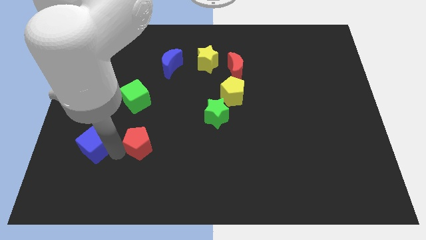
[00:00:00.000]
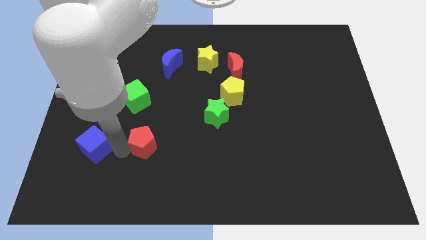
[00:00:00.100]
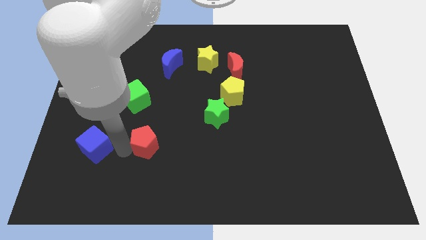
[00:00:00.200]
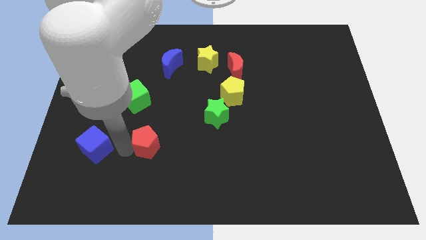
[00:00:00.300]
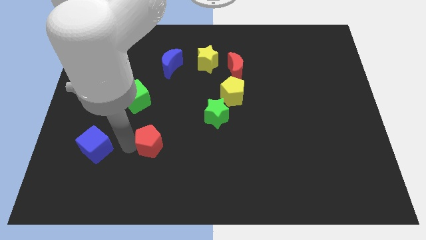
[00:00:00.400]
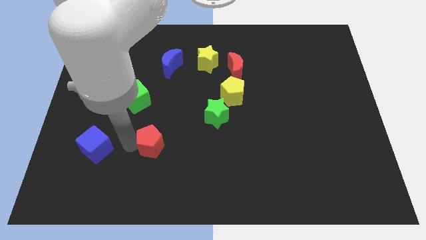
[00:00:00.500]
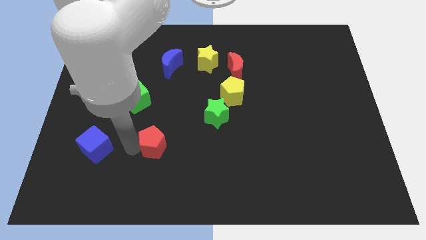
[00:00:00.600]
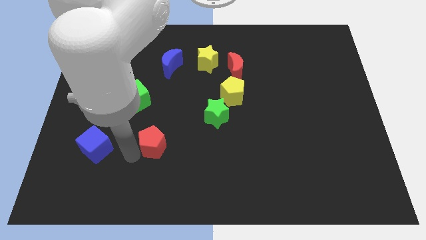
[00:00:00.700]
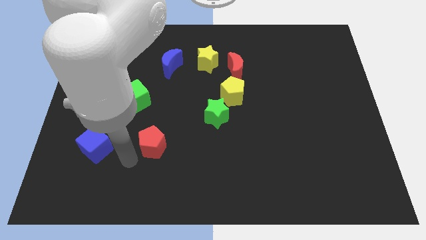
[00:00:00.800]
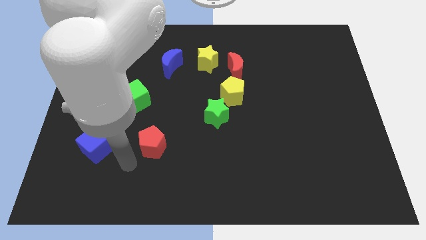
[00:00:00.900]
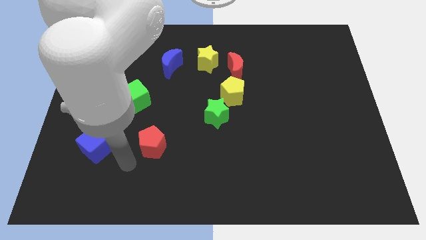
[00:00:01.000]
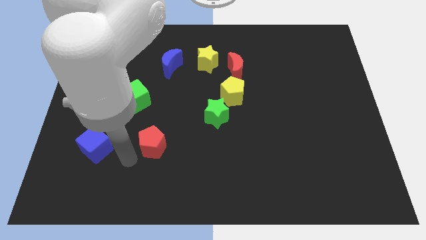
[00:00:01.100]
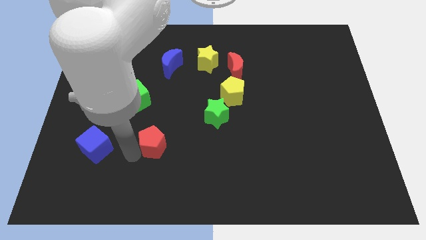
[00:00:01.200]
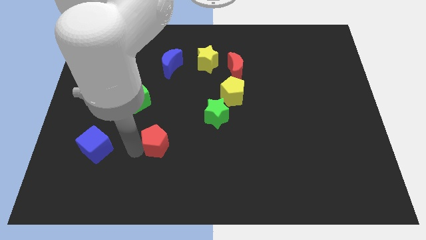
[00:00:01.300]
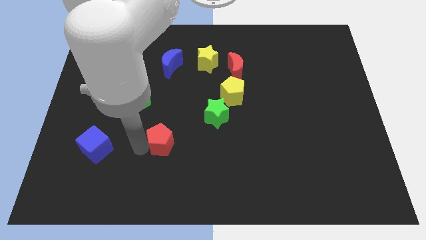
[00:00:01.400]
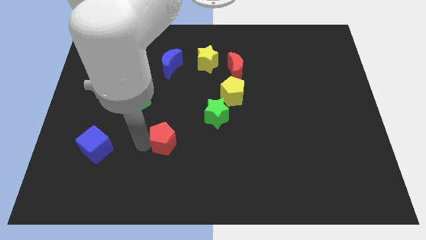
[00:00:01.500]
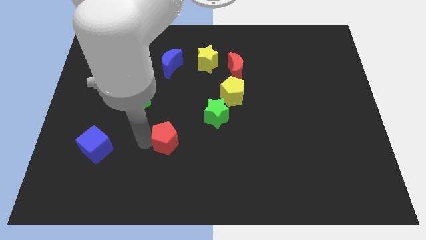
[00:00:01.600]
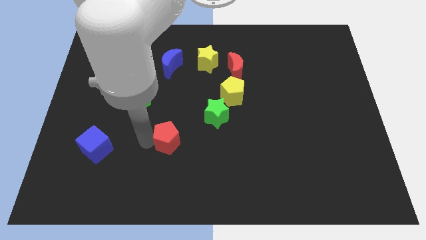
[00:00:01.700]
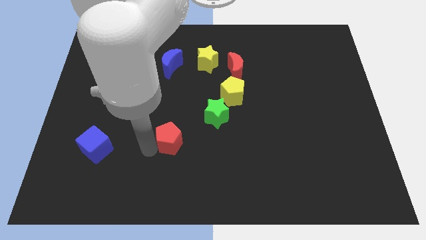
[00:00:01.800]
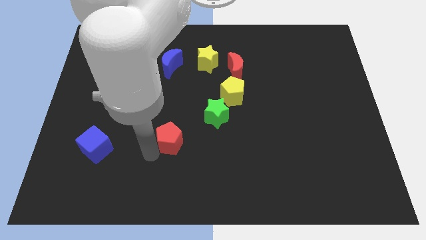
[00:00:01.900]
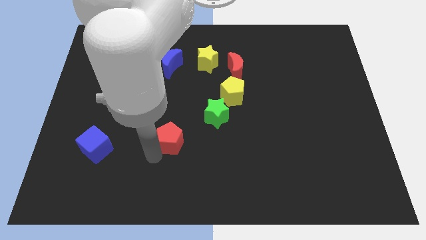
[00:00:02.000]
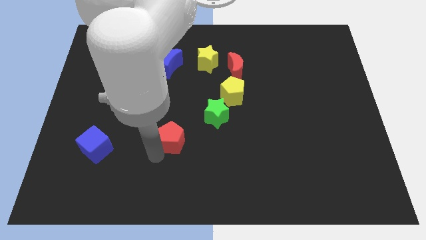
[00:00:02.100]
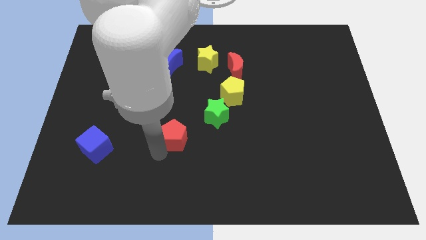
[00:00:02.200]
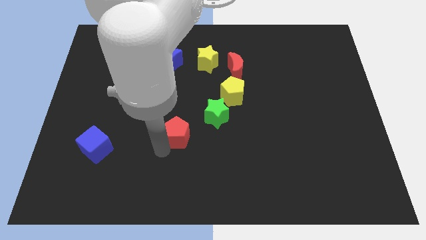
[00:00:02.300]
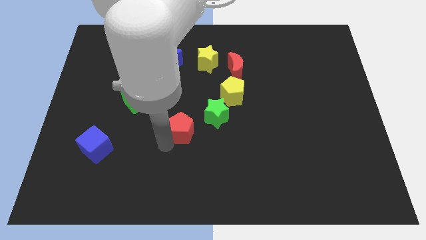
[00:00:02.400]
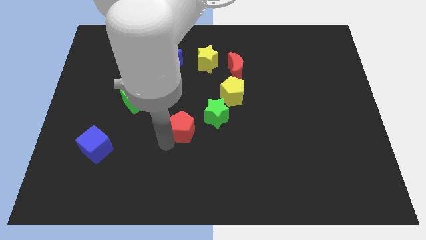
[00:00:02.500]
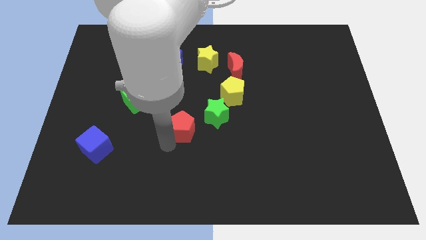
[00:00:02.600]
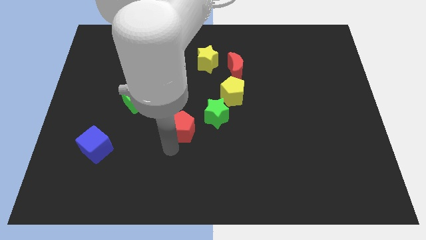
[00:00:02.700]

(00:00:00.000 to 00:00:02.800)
move the red pentagon diagonally below to the green star

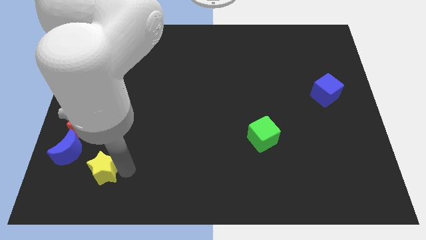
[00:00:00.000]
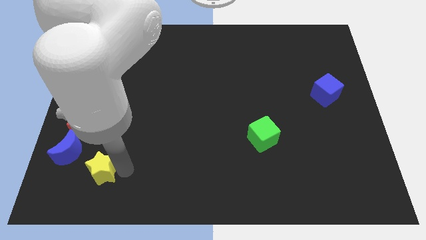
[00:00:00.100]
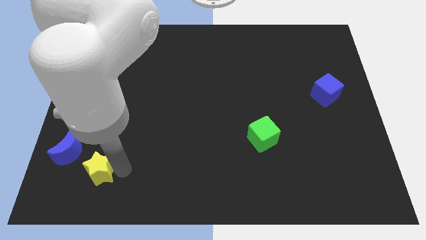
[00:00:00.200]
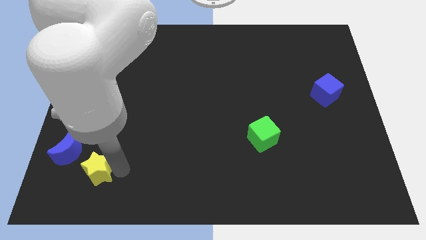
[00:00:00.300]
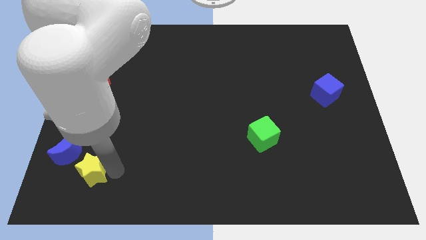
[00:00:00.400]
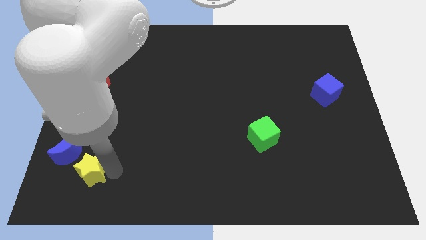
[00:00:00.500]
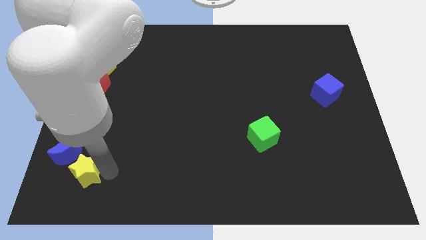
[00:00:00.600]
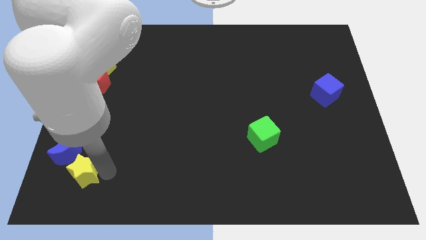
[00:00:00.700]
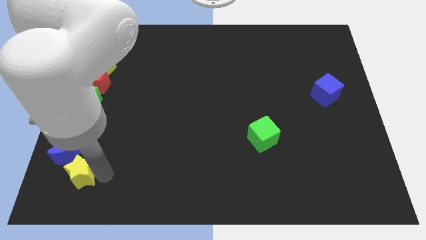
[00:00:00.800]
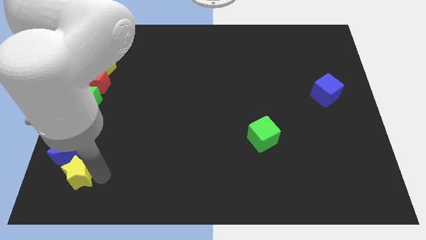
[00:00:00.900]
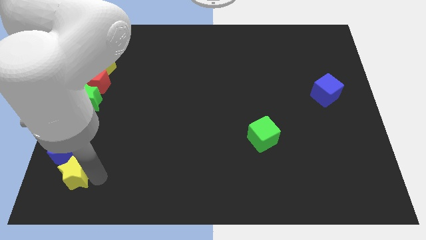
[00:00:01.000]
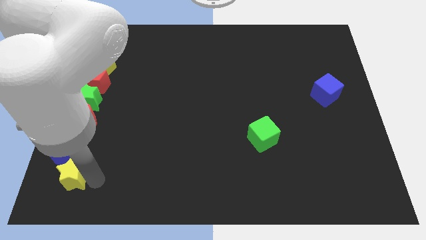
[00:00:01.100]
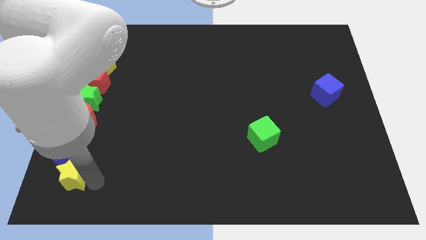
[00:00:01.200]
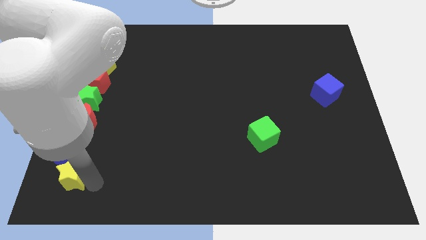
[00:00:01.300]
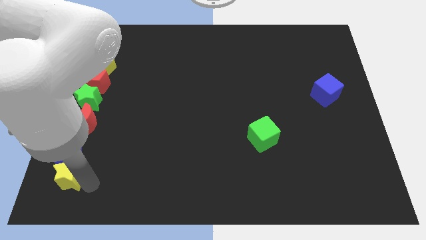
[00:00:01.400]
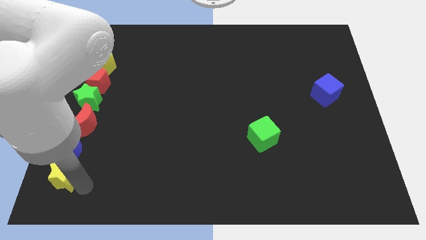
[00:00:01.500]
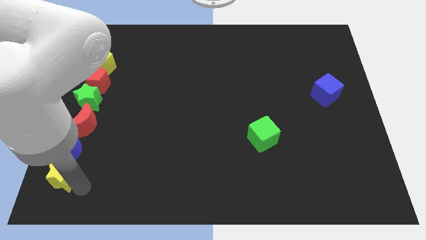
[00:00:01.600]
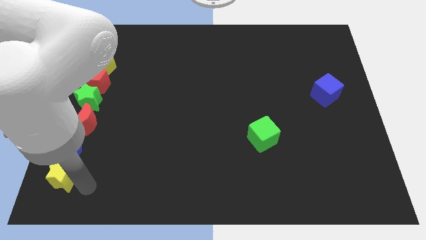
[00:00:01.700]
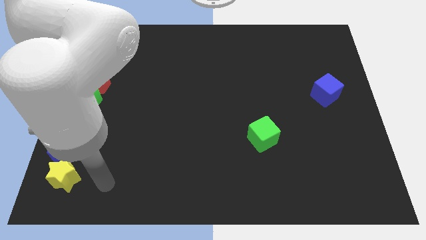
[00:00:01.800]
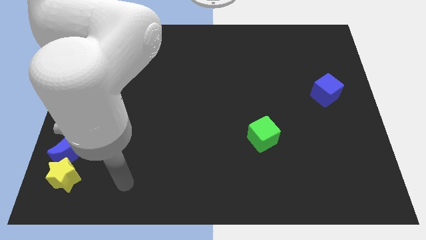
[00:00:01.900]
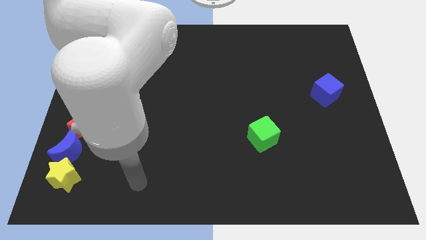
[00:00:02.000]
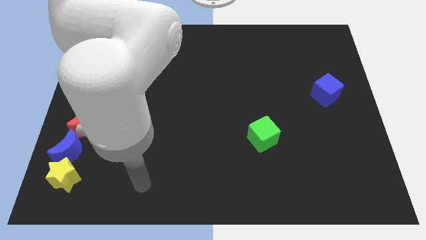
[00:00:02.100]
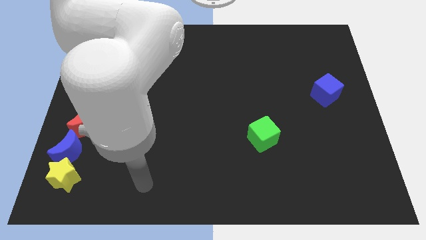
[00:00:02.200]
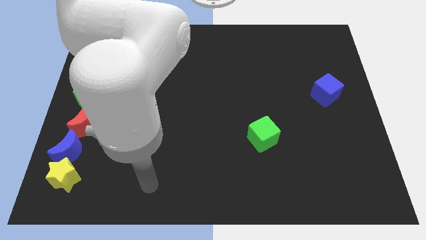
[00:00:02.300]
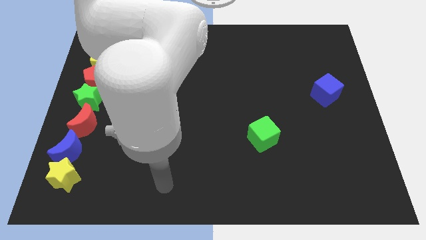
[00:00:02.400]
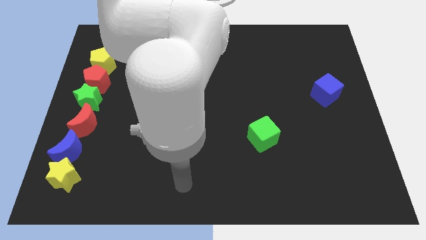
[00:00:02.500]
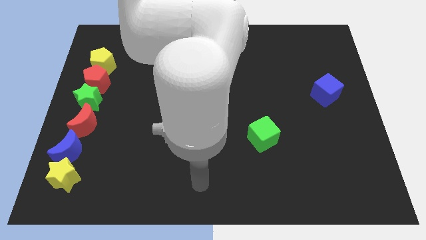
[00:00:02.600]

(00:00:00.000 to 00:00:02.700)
push the yellow star to the bottom of blue moon

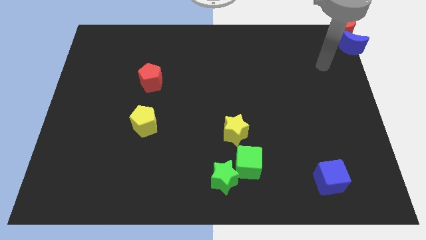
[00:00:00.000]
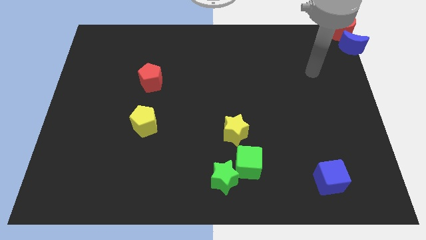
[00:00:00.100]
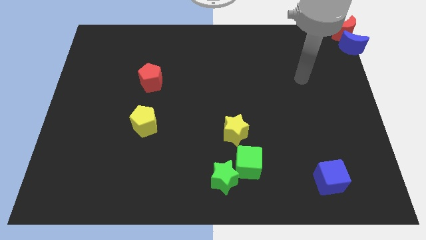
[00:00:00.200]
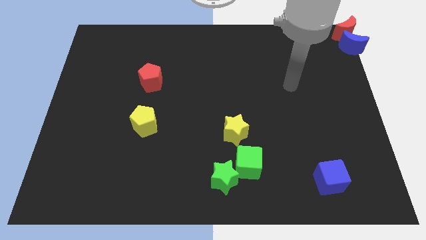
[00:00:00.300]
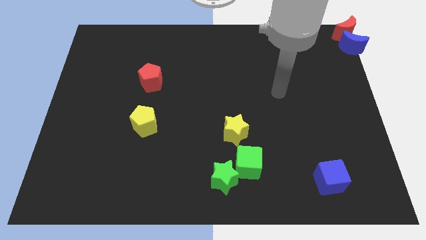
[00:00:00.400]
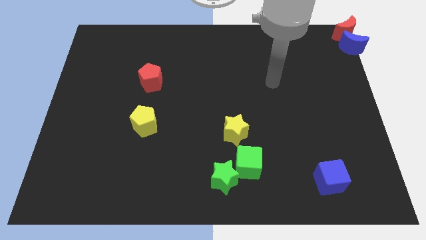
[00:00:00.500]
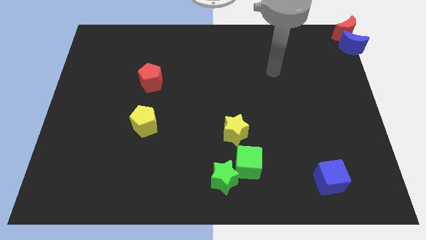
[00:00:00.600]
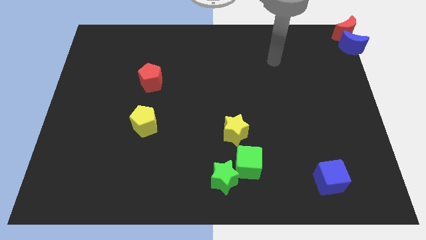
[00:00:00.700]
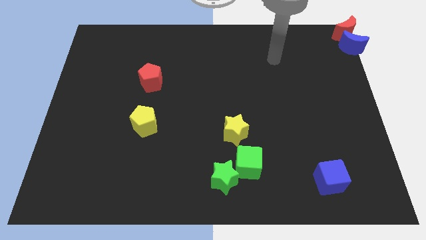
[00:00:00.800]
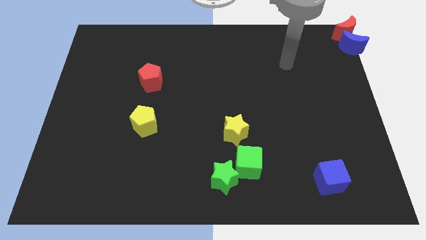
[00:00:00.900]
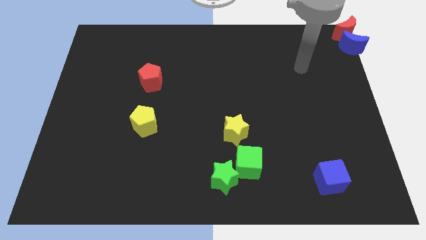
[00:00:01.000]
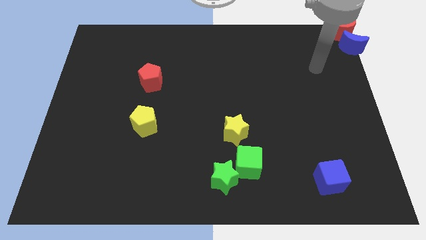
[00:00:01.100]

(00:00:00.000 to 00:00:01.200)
move your arm away from red moon

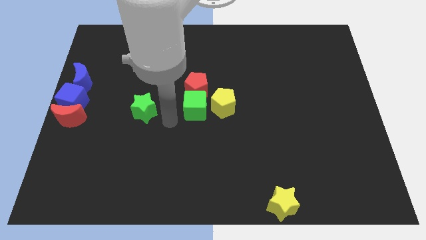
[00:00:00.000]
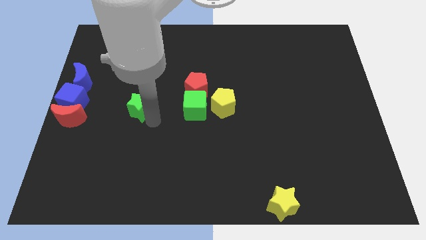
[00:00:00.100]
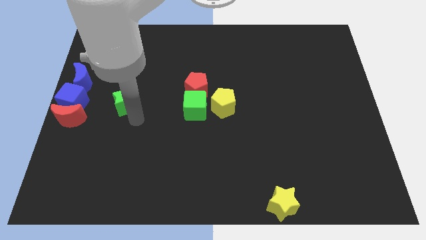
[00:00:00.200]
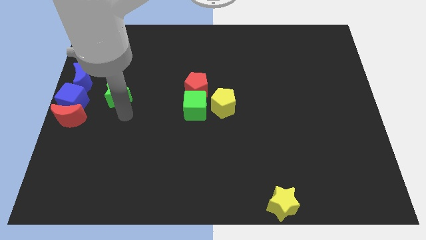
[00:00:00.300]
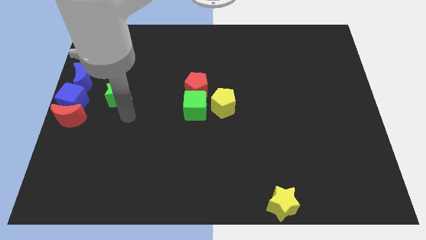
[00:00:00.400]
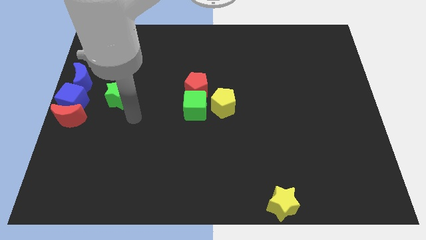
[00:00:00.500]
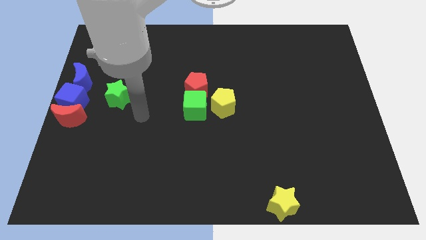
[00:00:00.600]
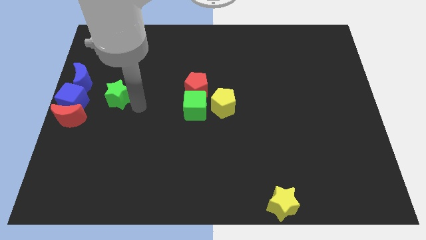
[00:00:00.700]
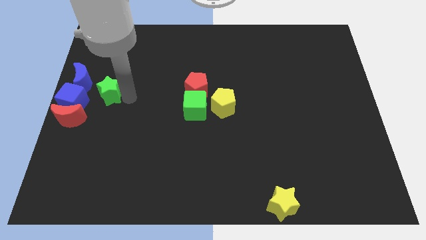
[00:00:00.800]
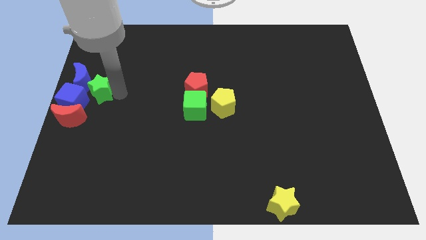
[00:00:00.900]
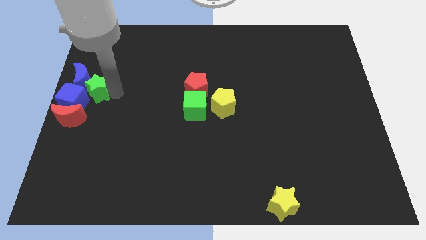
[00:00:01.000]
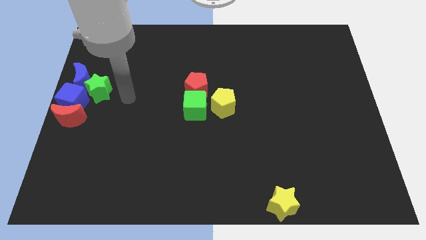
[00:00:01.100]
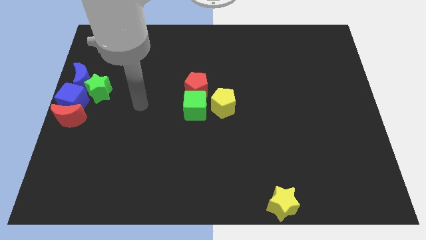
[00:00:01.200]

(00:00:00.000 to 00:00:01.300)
place the green star right beside the blue cube and blue moon

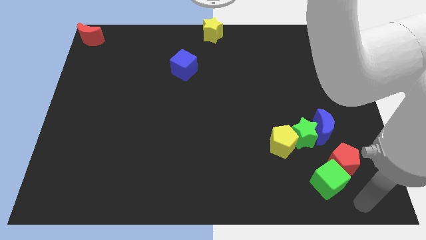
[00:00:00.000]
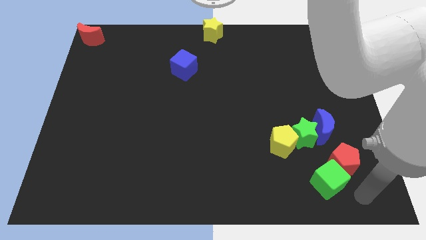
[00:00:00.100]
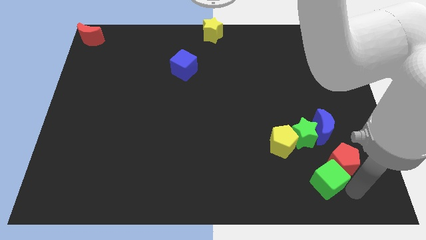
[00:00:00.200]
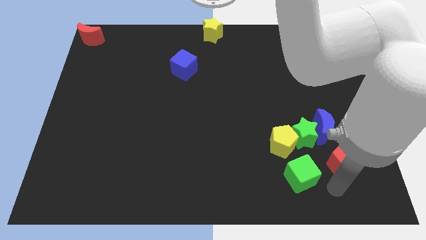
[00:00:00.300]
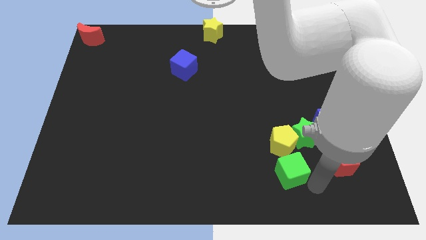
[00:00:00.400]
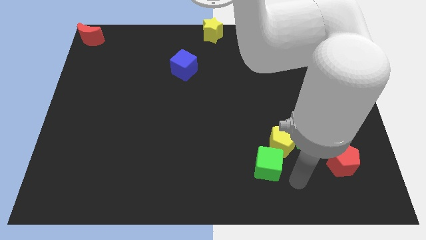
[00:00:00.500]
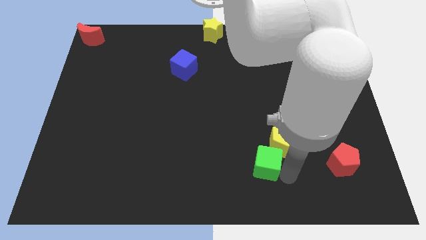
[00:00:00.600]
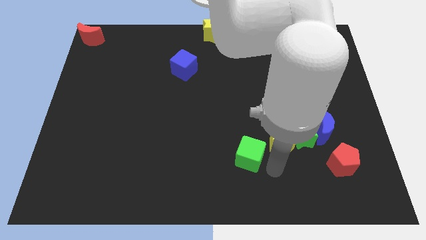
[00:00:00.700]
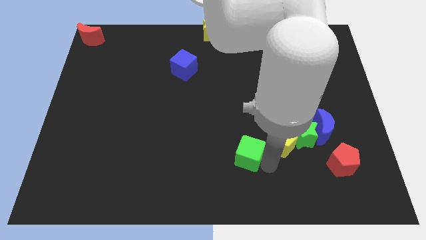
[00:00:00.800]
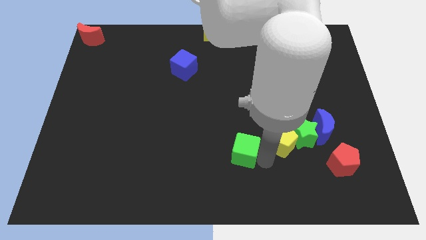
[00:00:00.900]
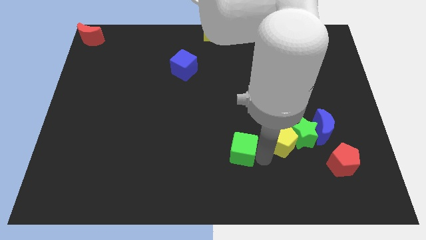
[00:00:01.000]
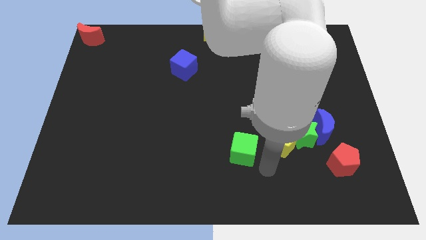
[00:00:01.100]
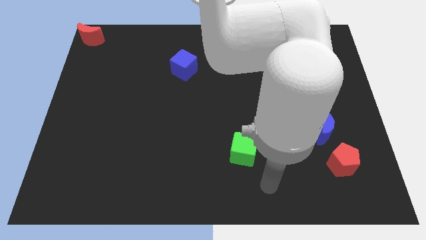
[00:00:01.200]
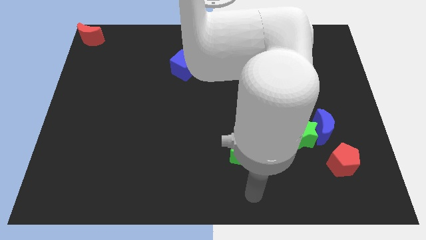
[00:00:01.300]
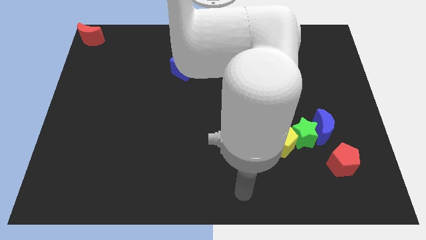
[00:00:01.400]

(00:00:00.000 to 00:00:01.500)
move green cube away from the red pentagon
